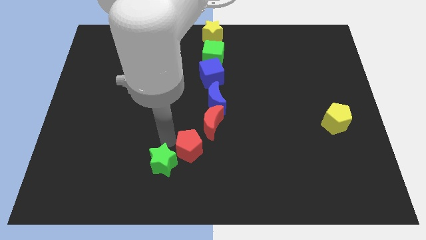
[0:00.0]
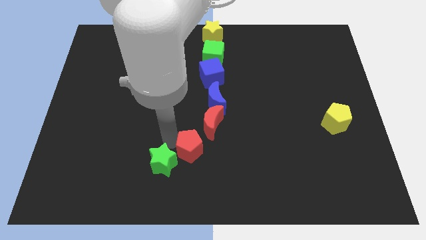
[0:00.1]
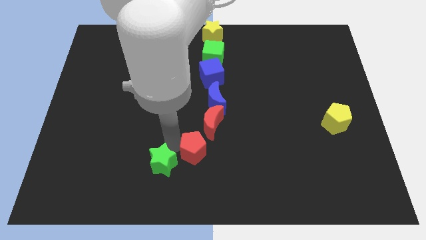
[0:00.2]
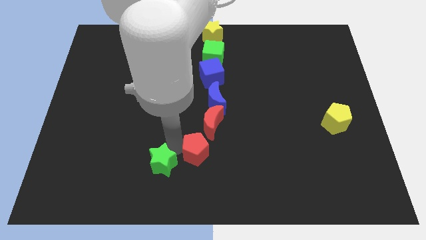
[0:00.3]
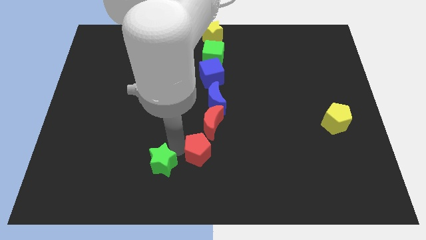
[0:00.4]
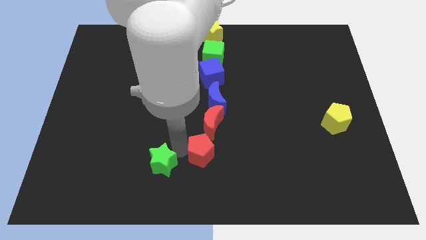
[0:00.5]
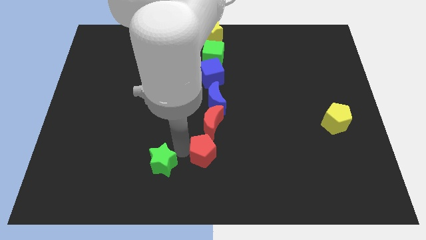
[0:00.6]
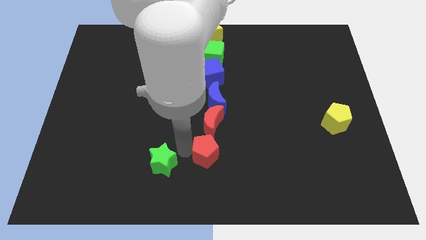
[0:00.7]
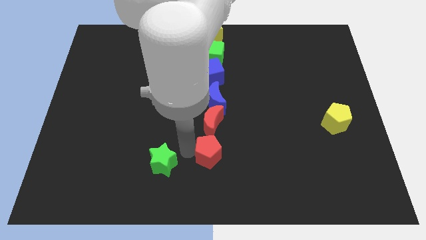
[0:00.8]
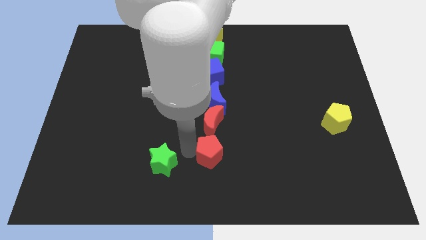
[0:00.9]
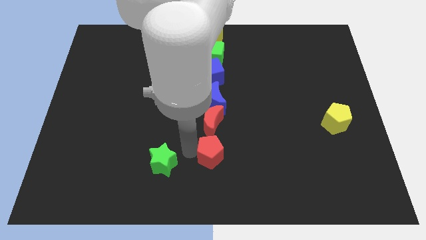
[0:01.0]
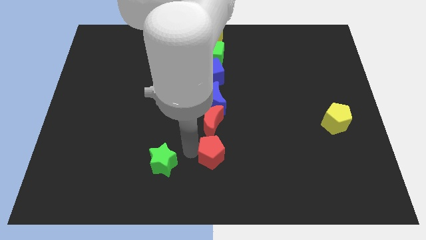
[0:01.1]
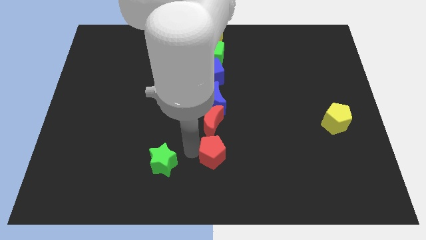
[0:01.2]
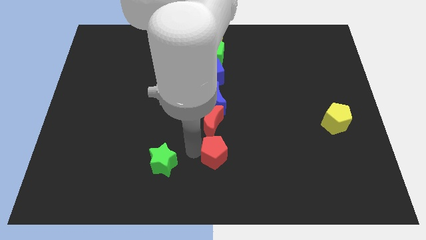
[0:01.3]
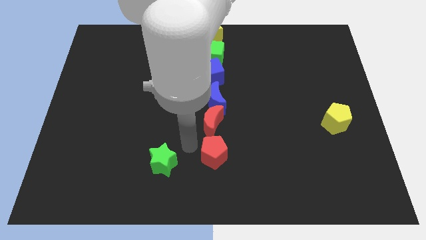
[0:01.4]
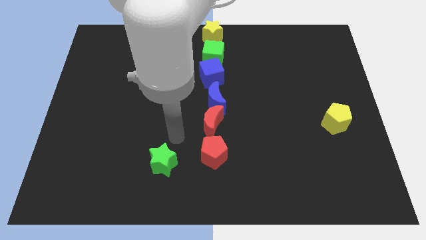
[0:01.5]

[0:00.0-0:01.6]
place the red pentagon under the red moon

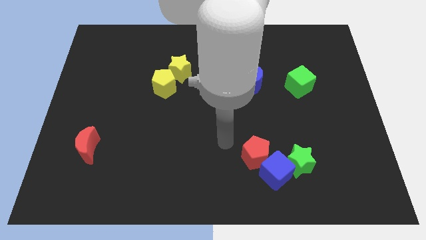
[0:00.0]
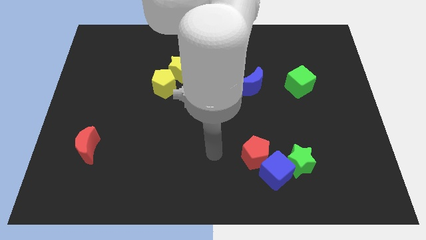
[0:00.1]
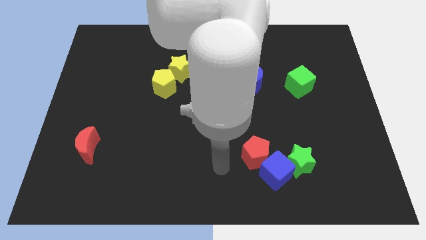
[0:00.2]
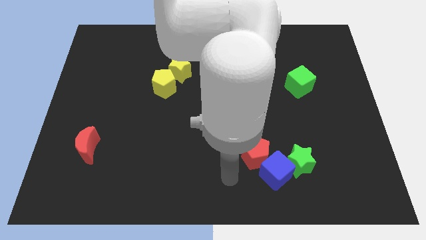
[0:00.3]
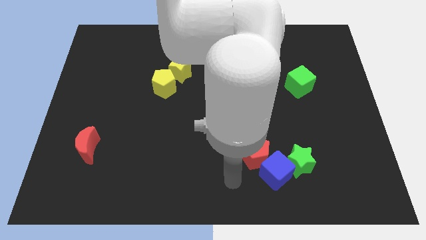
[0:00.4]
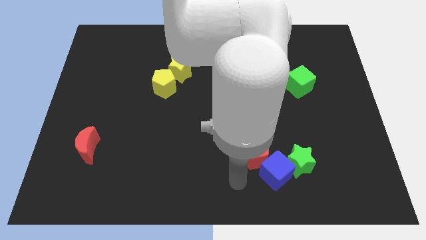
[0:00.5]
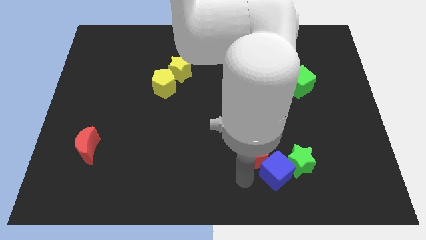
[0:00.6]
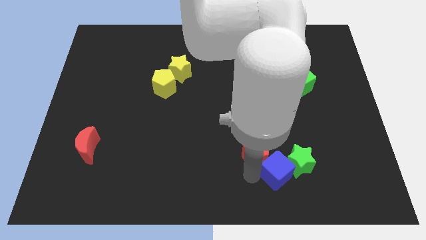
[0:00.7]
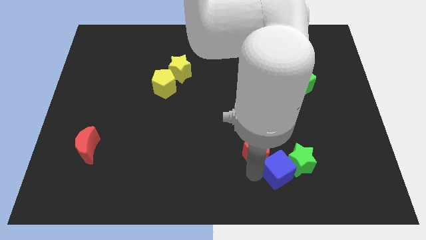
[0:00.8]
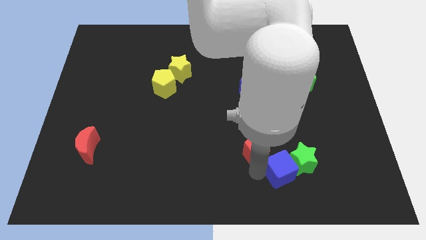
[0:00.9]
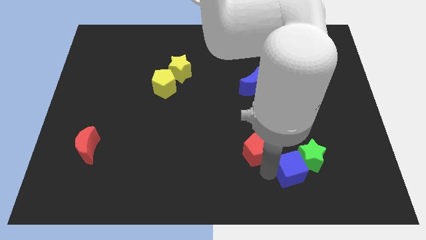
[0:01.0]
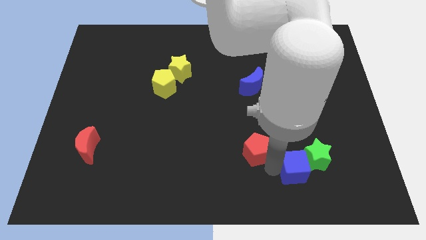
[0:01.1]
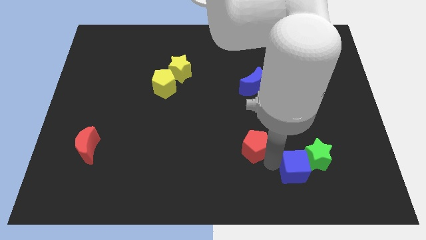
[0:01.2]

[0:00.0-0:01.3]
separate blue cube and red pentagon

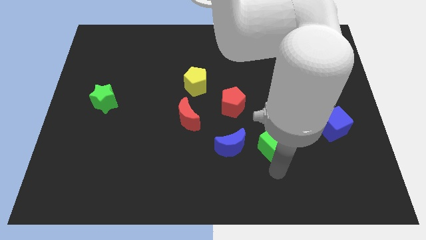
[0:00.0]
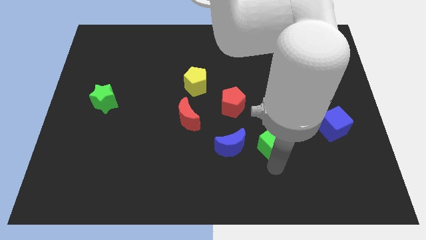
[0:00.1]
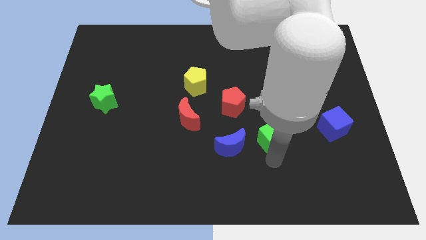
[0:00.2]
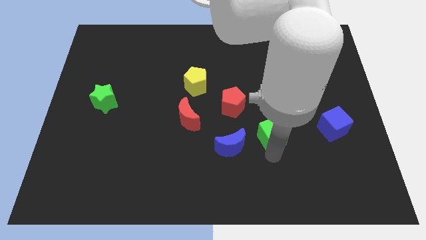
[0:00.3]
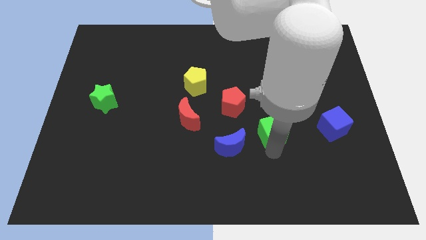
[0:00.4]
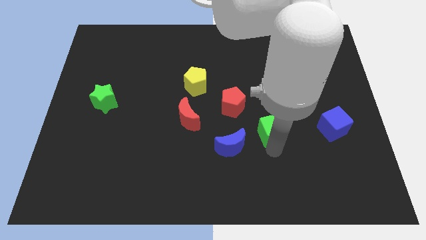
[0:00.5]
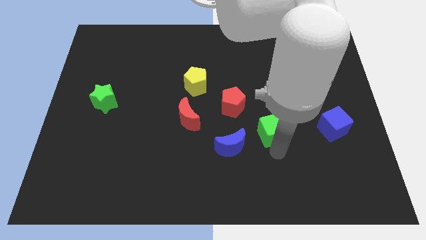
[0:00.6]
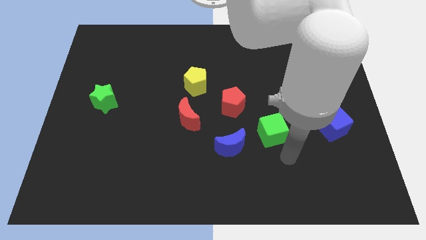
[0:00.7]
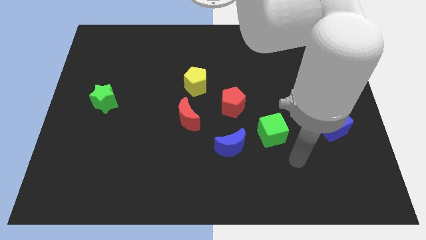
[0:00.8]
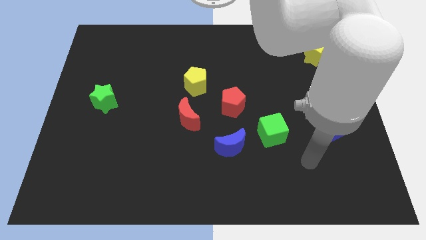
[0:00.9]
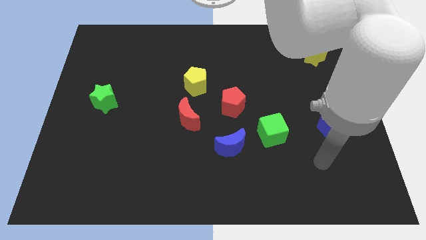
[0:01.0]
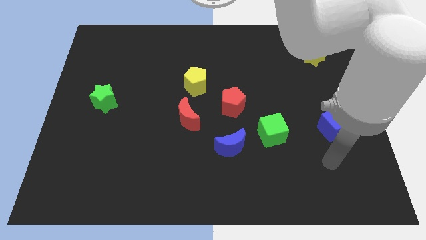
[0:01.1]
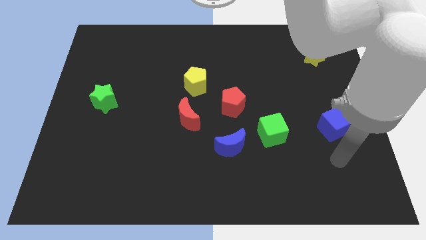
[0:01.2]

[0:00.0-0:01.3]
move green cube to the top right of the blue moon

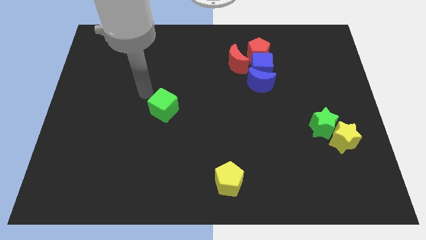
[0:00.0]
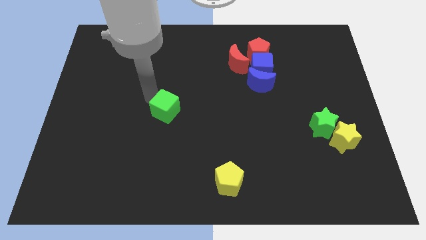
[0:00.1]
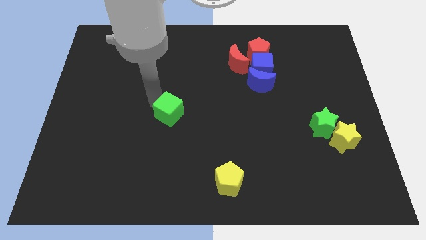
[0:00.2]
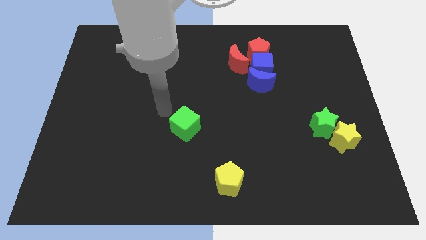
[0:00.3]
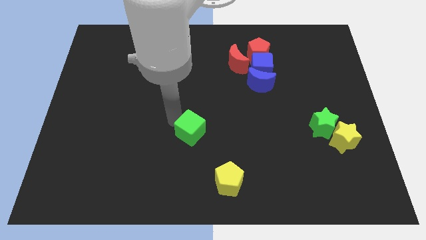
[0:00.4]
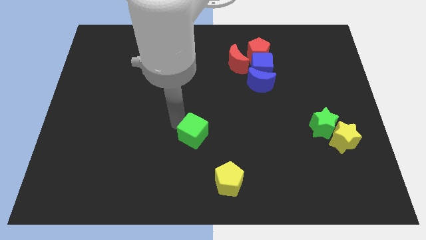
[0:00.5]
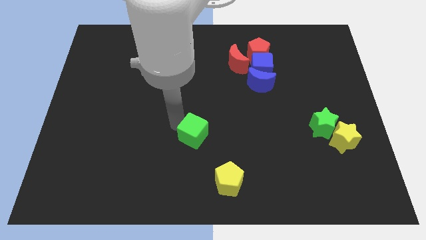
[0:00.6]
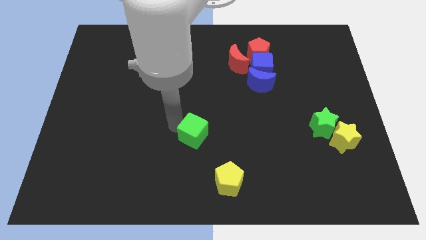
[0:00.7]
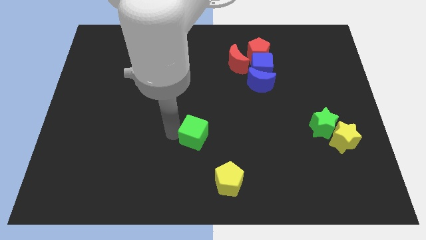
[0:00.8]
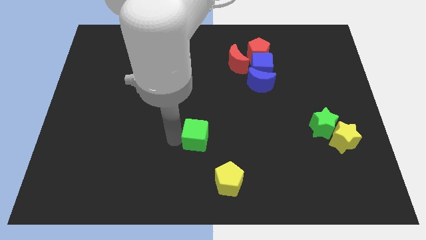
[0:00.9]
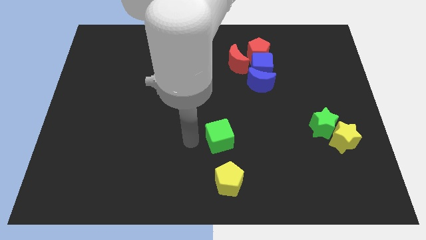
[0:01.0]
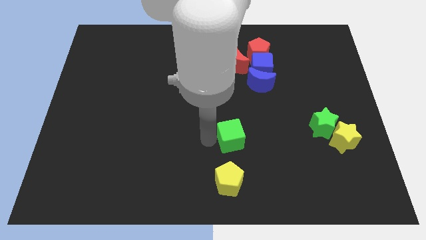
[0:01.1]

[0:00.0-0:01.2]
move the green cube to the top of the yellow pentagon

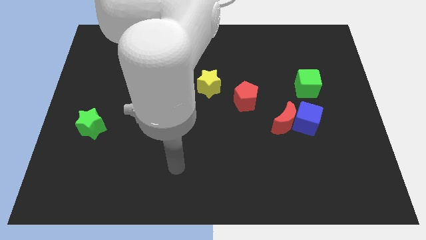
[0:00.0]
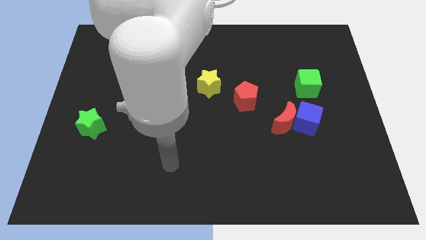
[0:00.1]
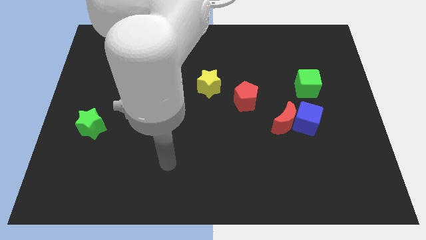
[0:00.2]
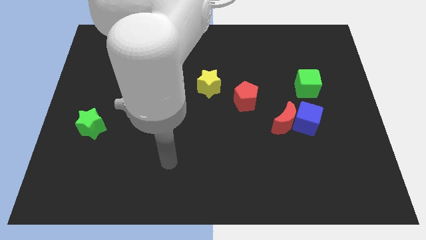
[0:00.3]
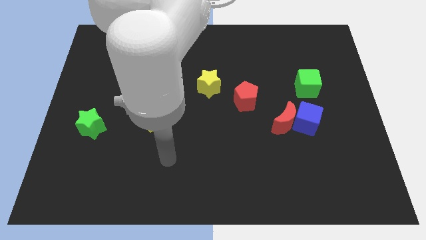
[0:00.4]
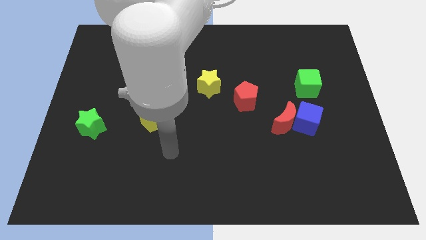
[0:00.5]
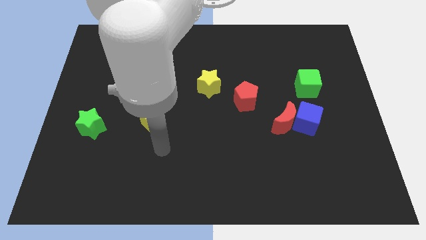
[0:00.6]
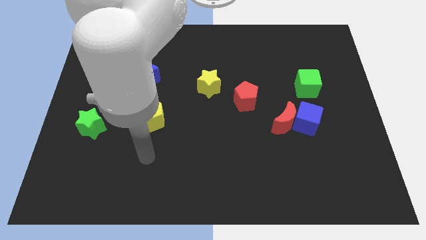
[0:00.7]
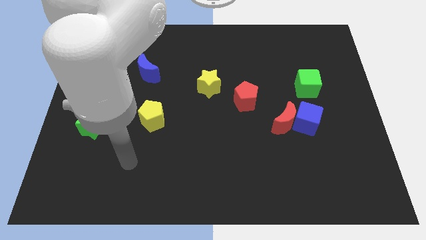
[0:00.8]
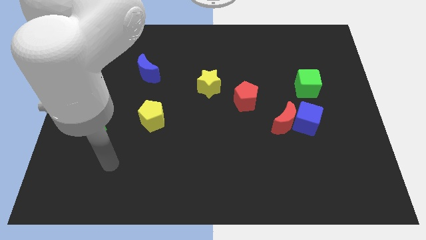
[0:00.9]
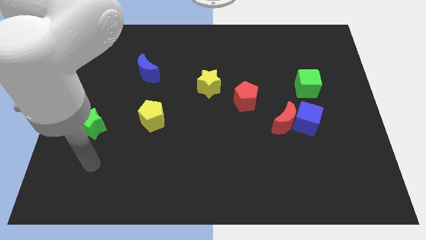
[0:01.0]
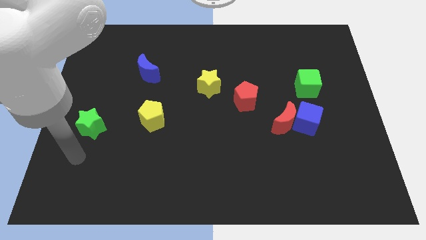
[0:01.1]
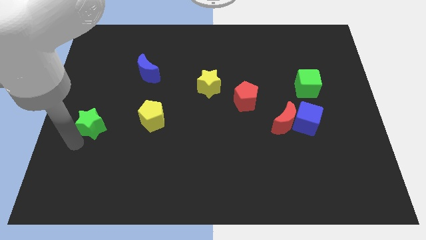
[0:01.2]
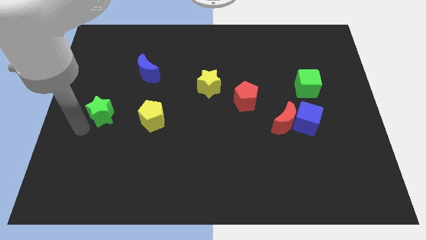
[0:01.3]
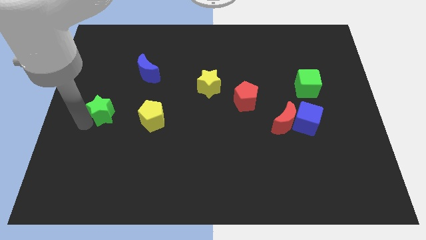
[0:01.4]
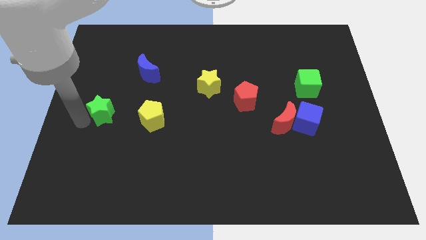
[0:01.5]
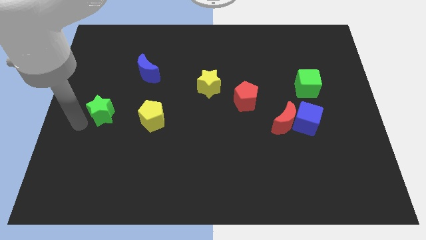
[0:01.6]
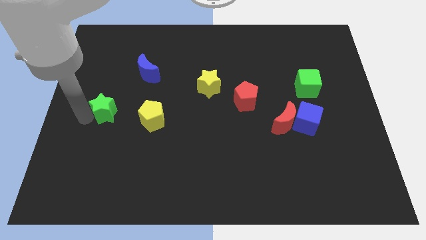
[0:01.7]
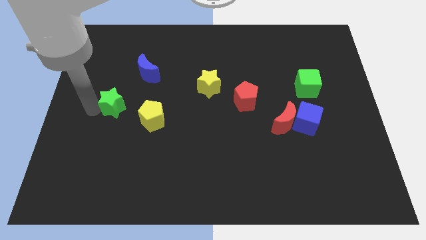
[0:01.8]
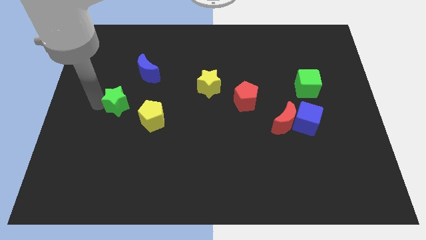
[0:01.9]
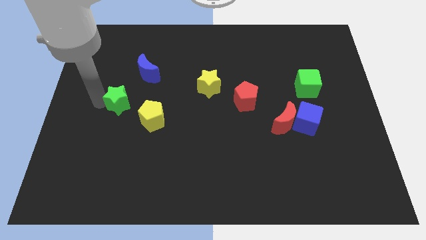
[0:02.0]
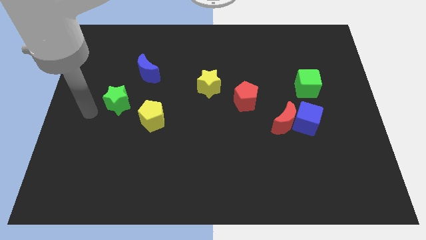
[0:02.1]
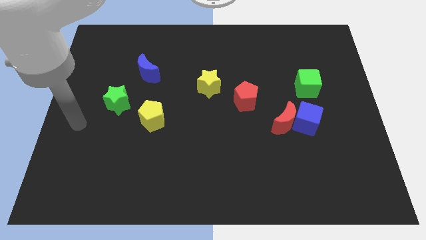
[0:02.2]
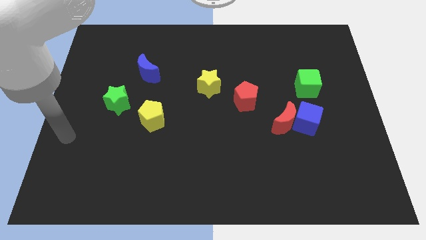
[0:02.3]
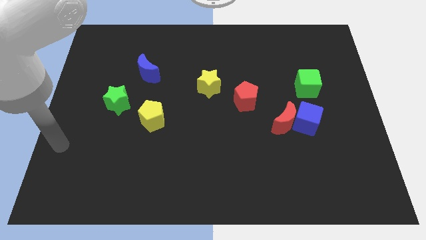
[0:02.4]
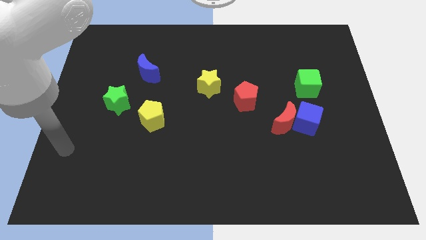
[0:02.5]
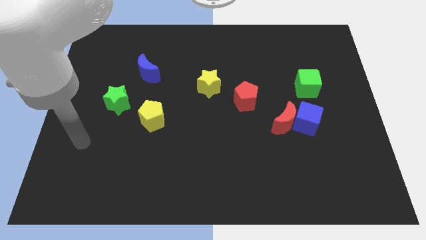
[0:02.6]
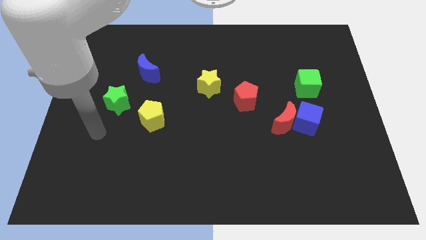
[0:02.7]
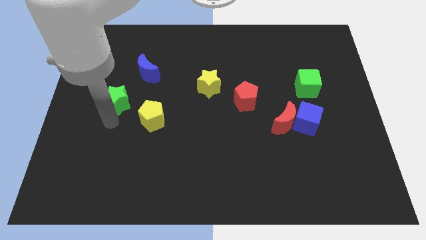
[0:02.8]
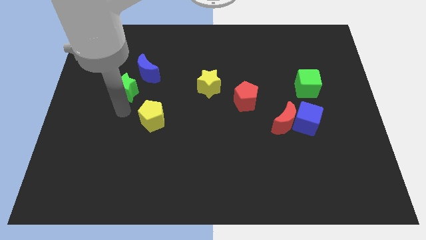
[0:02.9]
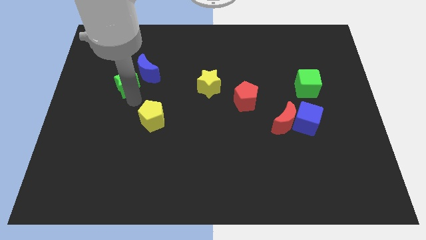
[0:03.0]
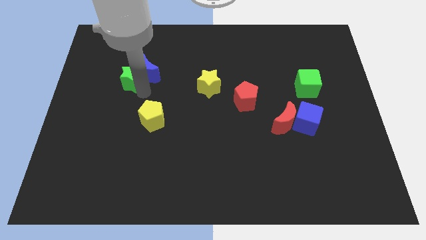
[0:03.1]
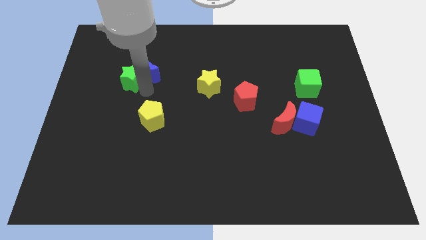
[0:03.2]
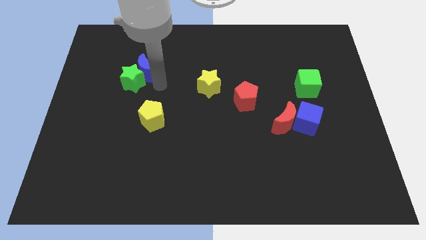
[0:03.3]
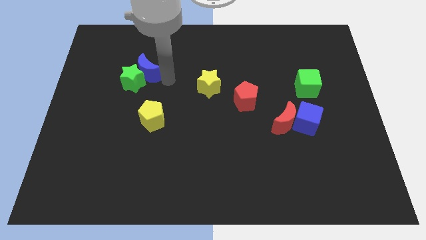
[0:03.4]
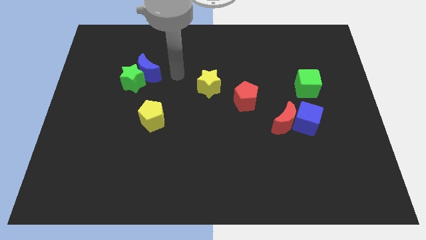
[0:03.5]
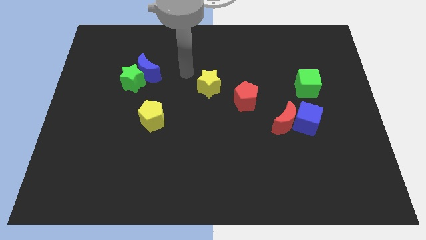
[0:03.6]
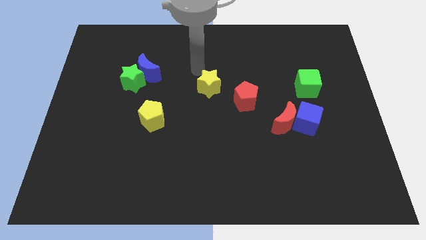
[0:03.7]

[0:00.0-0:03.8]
place the green star left to the blue crescent
